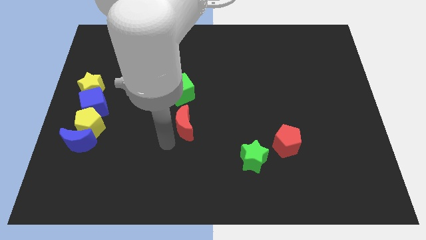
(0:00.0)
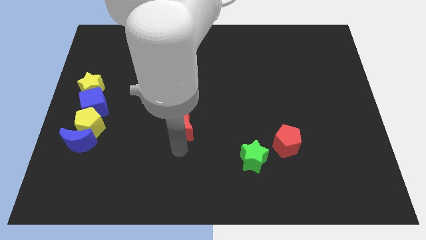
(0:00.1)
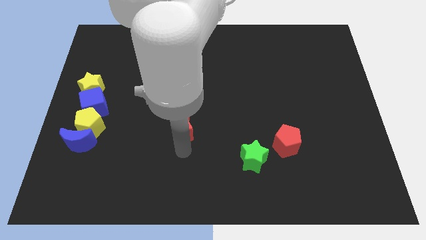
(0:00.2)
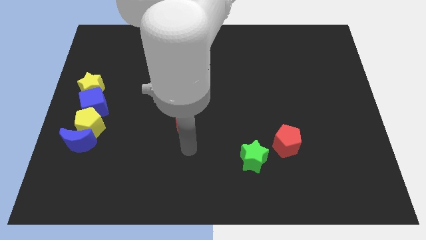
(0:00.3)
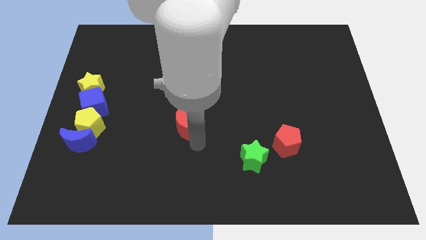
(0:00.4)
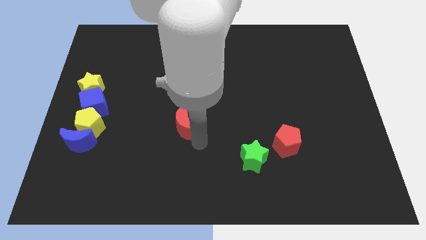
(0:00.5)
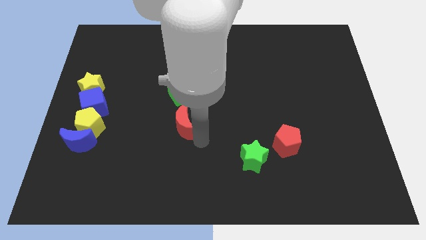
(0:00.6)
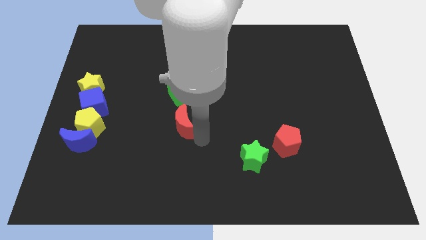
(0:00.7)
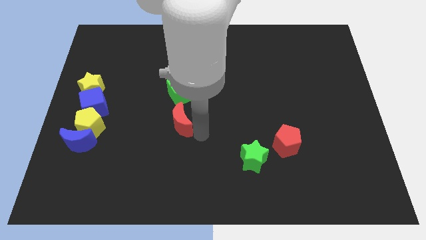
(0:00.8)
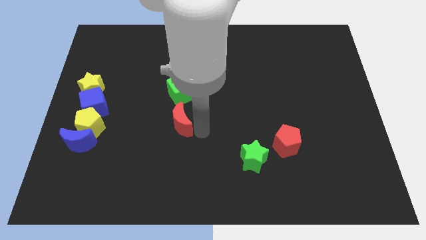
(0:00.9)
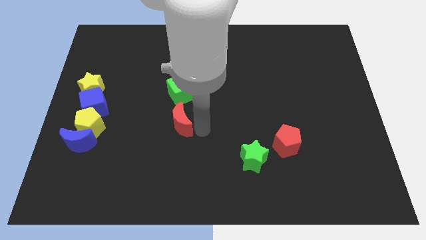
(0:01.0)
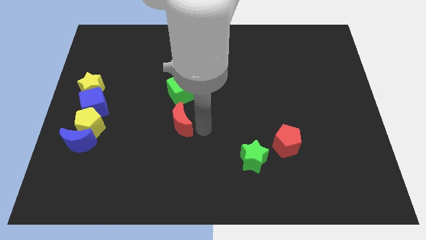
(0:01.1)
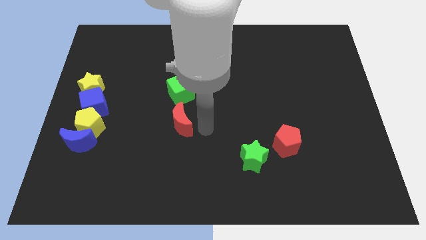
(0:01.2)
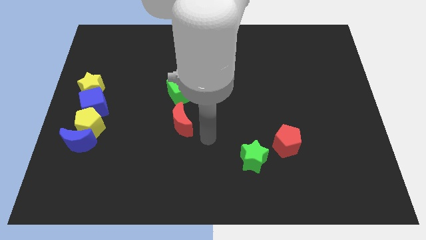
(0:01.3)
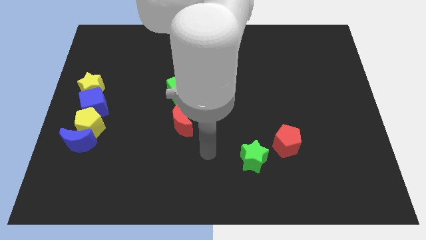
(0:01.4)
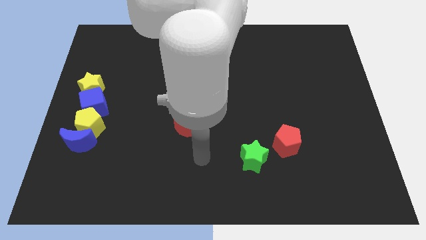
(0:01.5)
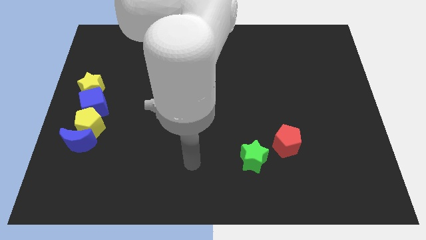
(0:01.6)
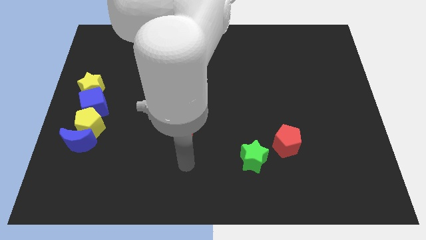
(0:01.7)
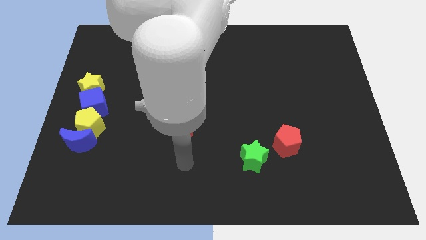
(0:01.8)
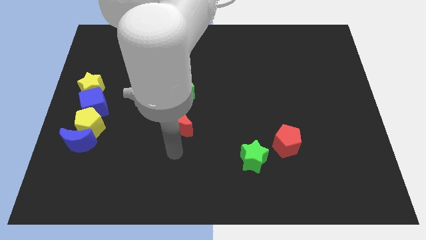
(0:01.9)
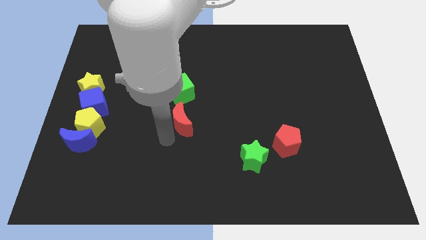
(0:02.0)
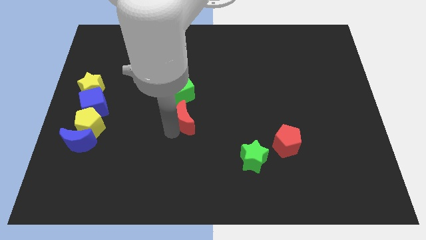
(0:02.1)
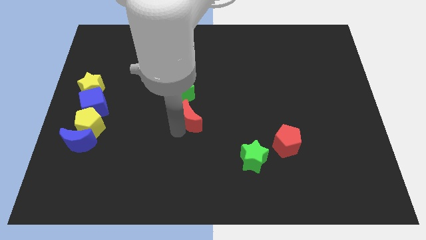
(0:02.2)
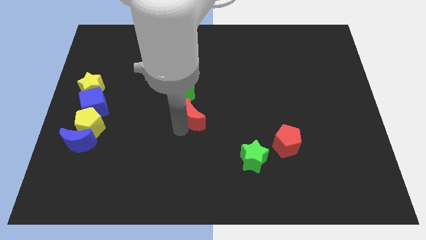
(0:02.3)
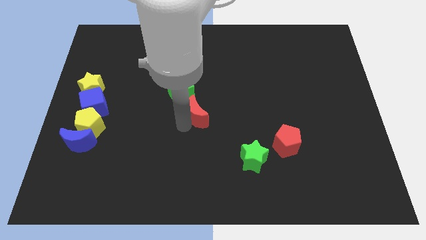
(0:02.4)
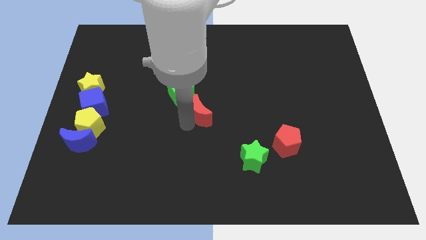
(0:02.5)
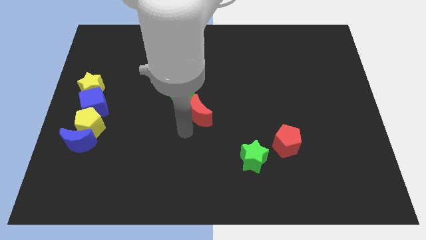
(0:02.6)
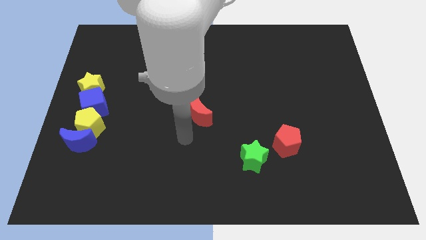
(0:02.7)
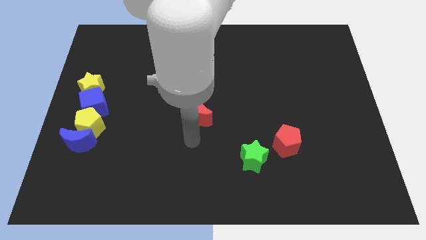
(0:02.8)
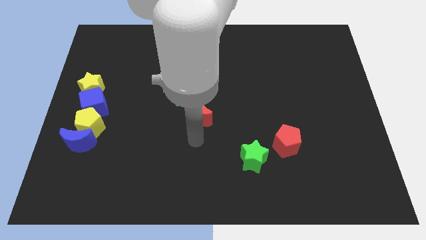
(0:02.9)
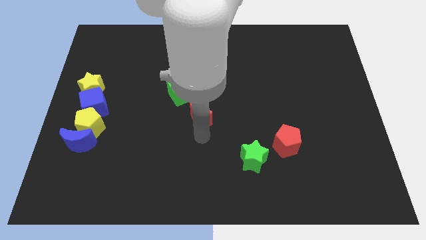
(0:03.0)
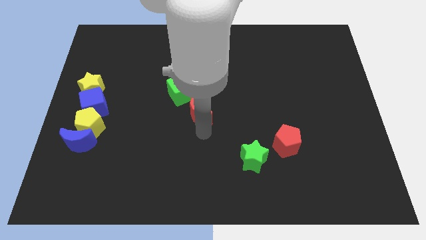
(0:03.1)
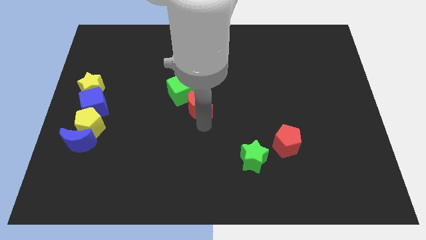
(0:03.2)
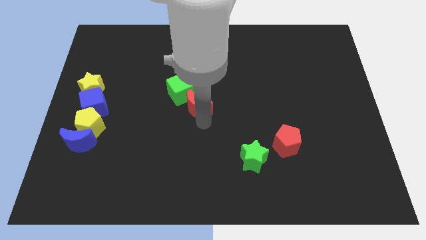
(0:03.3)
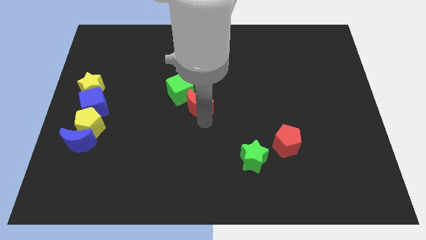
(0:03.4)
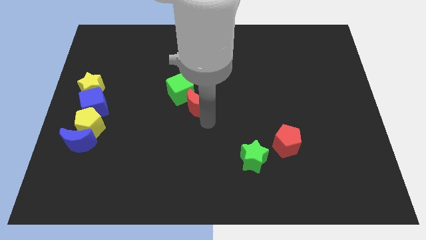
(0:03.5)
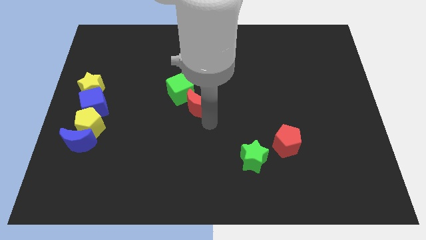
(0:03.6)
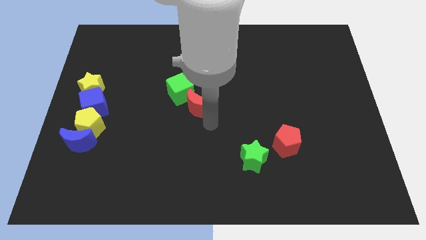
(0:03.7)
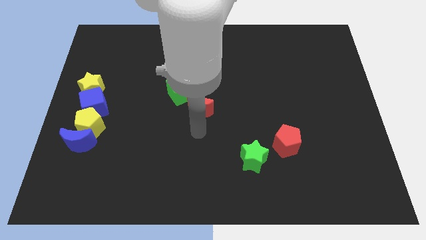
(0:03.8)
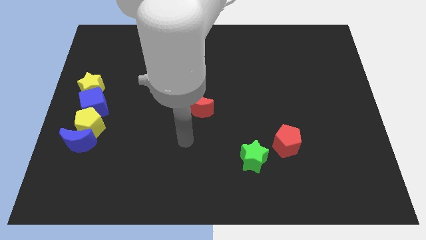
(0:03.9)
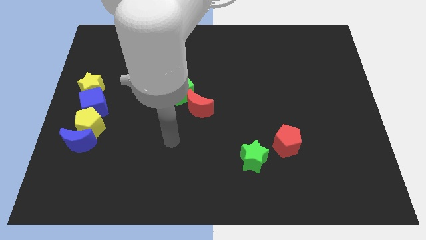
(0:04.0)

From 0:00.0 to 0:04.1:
push the red crescent into the green cube

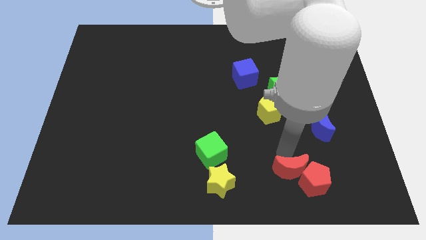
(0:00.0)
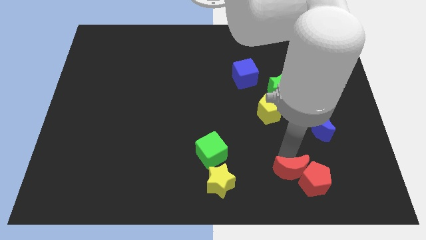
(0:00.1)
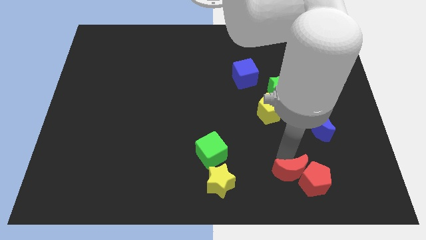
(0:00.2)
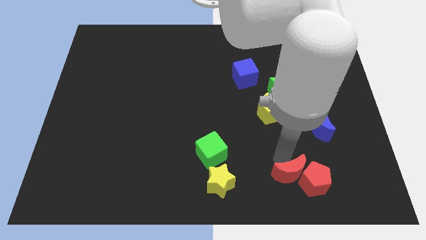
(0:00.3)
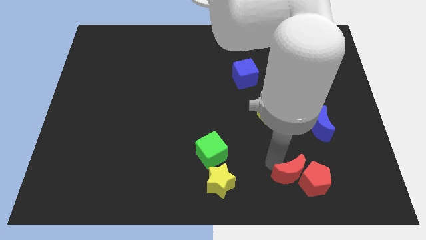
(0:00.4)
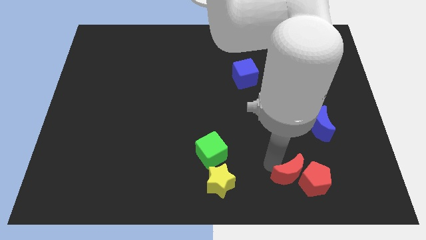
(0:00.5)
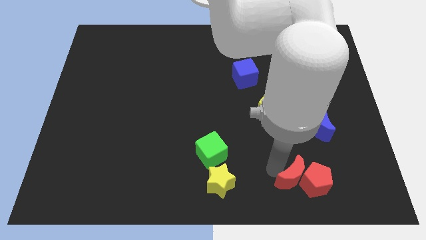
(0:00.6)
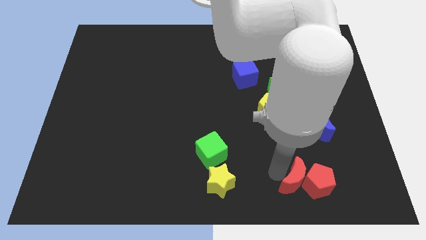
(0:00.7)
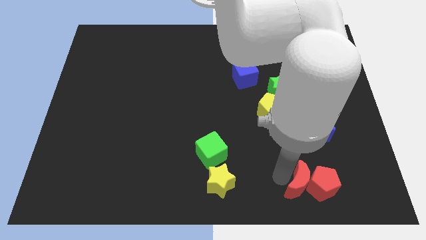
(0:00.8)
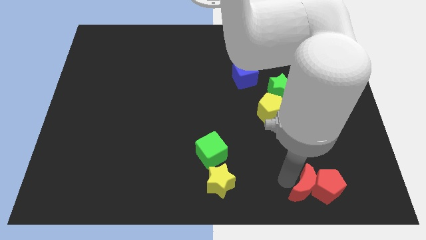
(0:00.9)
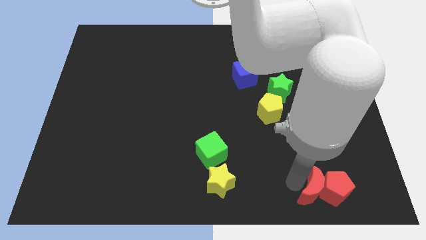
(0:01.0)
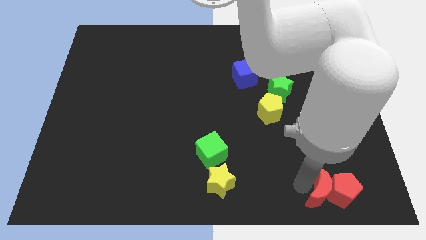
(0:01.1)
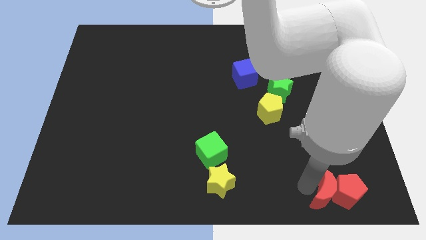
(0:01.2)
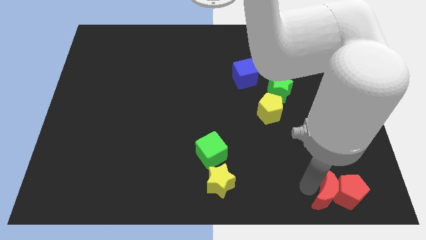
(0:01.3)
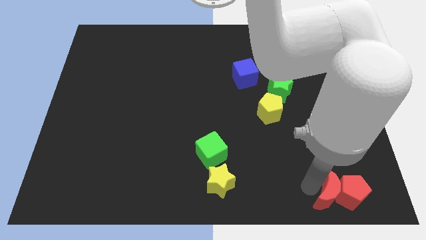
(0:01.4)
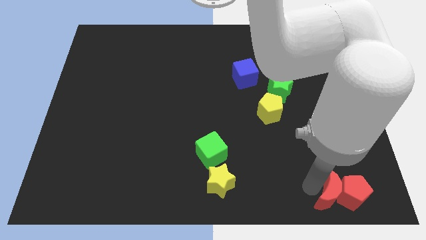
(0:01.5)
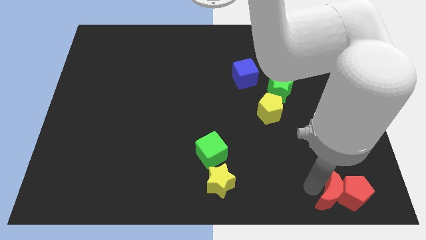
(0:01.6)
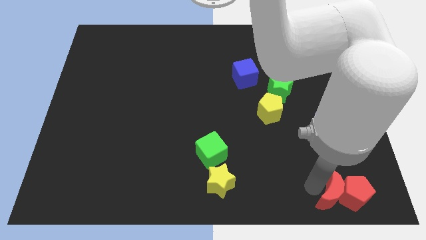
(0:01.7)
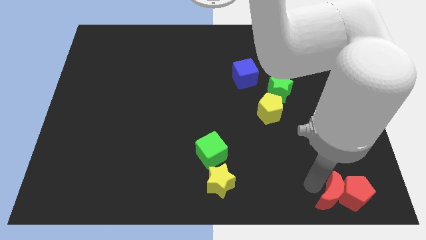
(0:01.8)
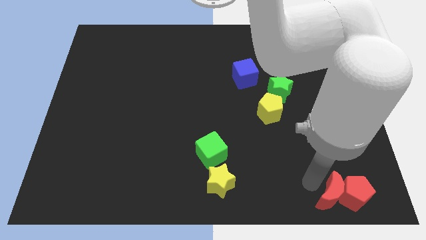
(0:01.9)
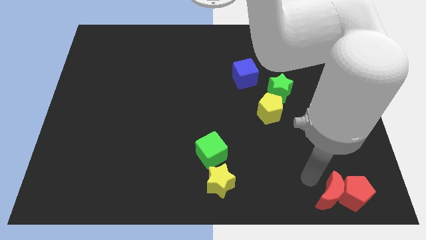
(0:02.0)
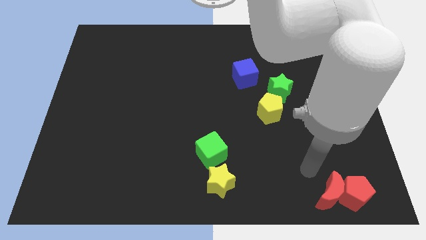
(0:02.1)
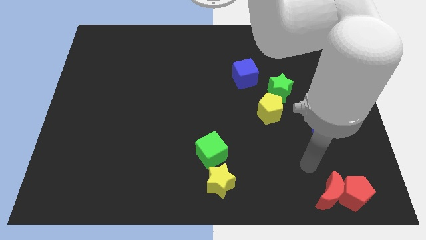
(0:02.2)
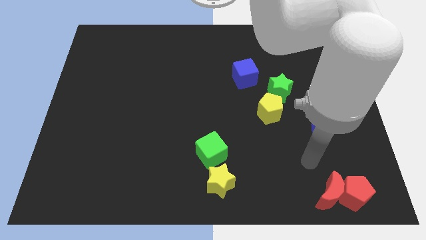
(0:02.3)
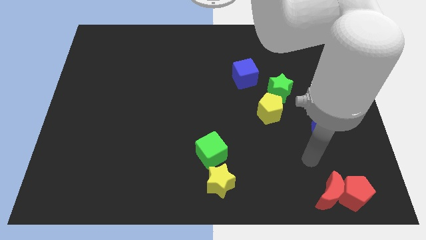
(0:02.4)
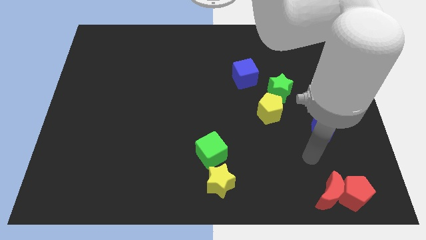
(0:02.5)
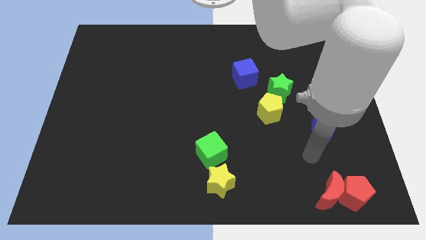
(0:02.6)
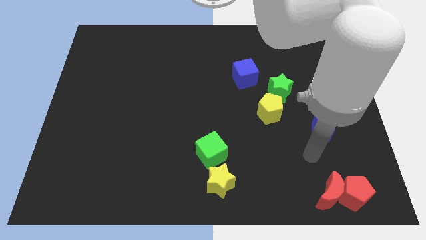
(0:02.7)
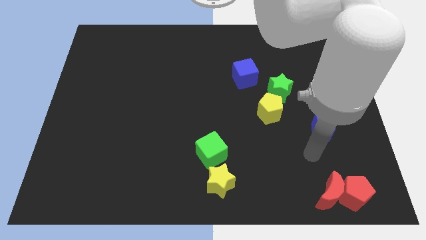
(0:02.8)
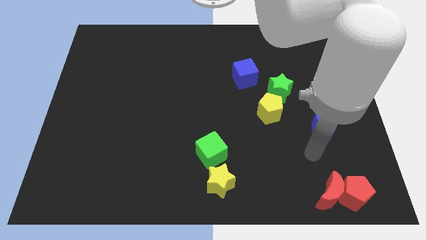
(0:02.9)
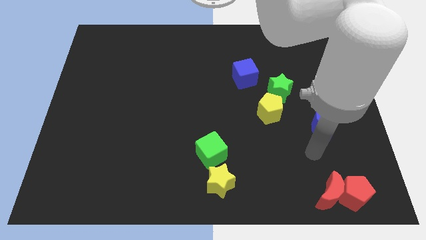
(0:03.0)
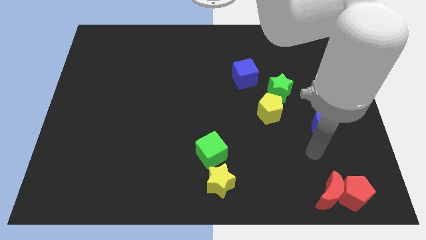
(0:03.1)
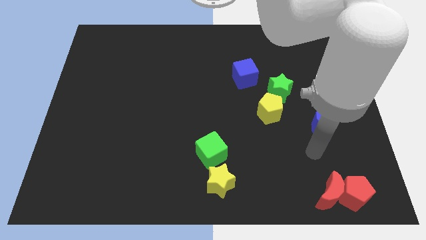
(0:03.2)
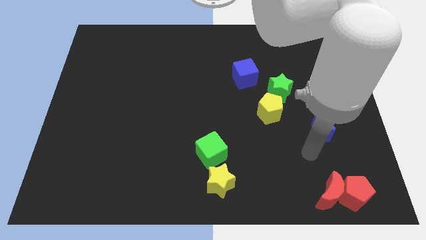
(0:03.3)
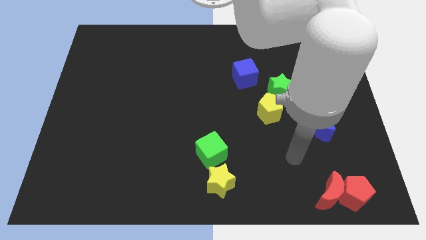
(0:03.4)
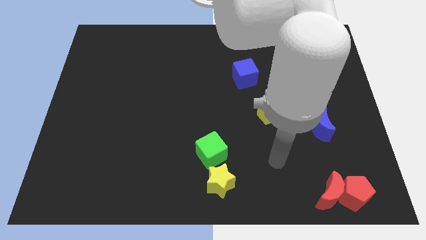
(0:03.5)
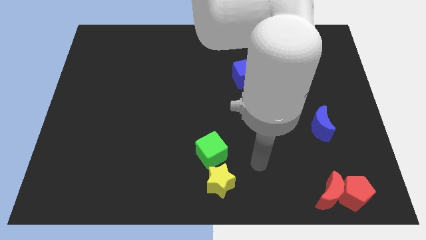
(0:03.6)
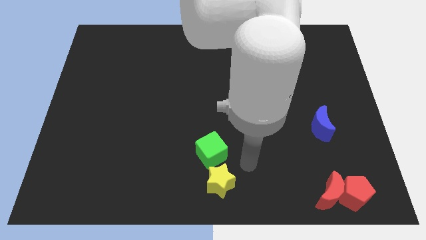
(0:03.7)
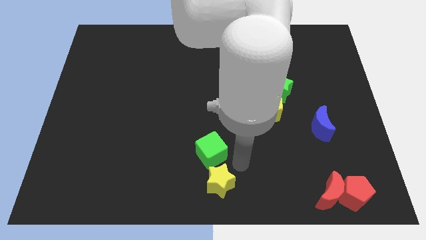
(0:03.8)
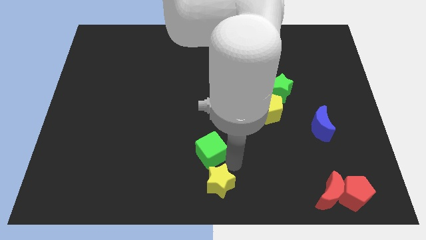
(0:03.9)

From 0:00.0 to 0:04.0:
move the red crescent and red pentagon to the bottom right corner

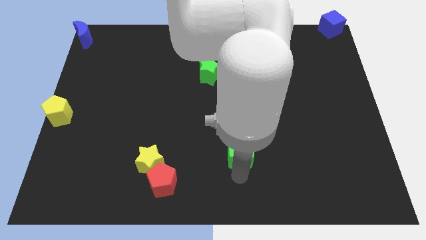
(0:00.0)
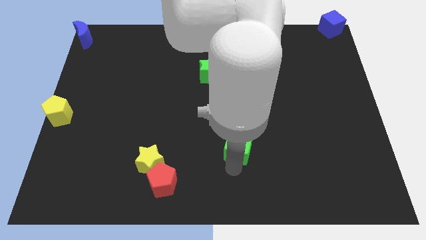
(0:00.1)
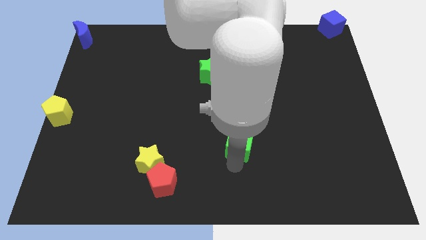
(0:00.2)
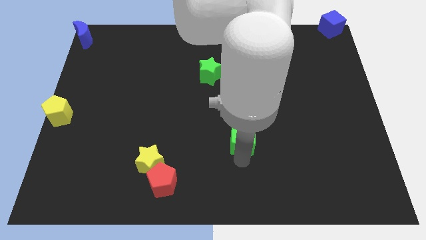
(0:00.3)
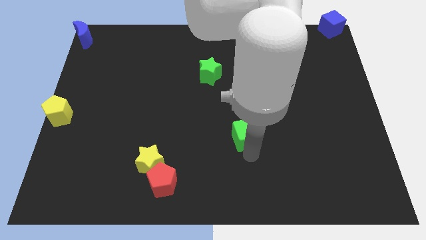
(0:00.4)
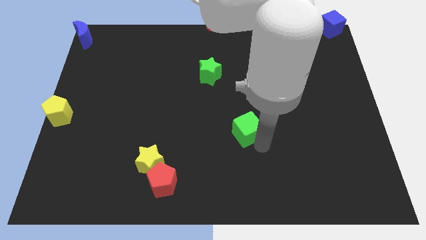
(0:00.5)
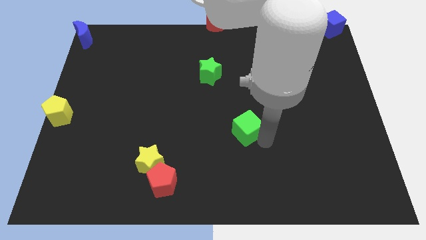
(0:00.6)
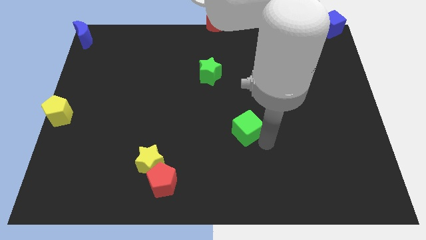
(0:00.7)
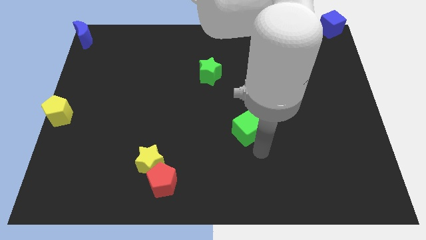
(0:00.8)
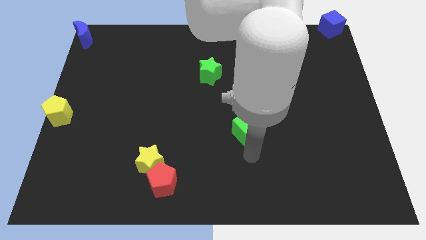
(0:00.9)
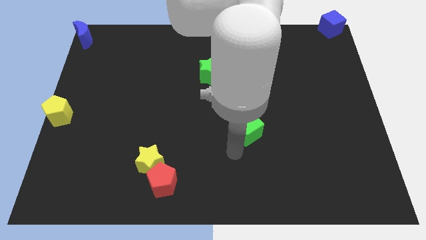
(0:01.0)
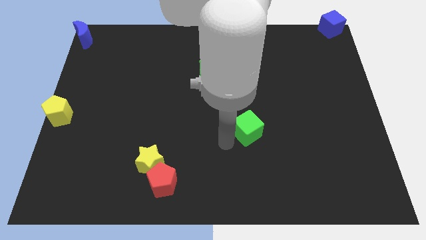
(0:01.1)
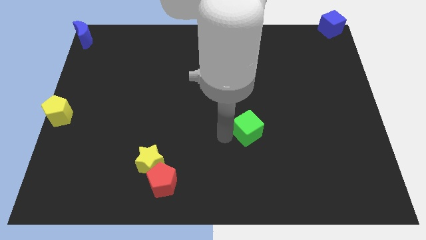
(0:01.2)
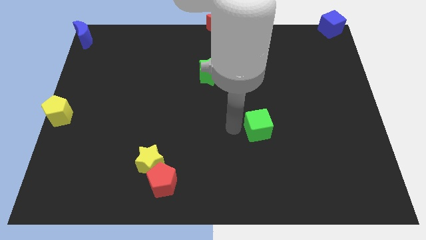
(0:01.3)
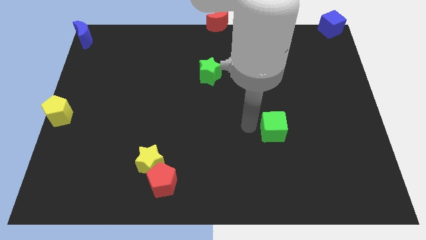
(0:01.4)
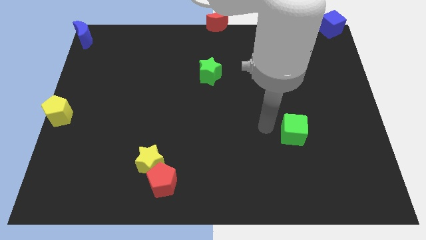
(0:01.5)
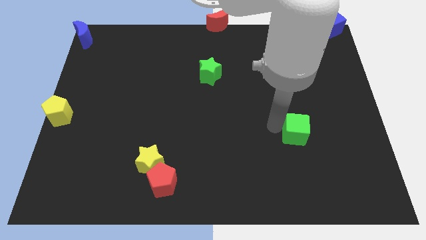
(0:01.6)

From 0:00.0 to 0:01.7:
push the green cube towards the right side of the board
